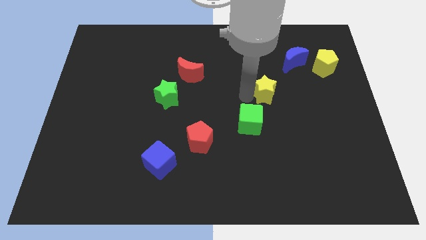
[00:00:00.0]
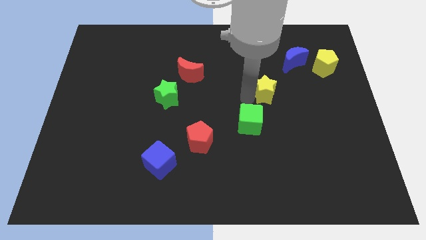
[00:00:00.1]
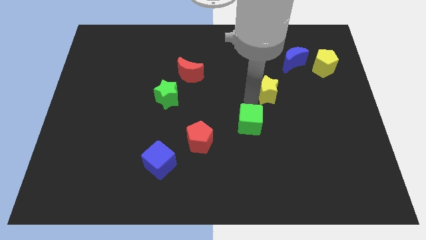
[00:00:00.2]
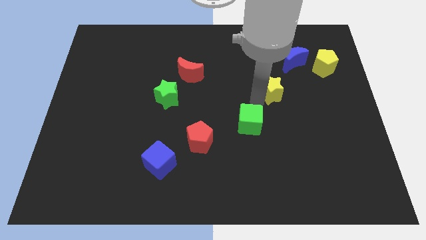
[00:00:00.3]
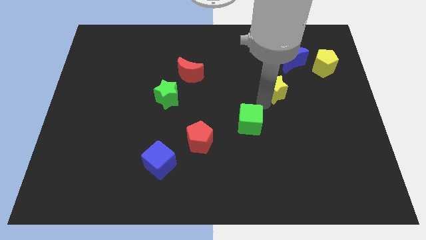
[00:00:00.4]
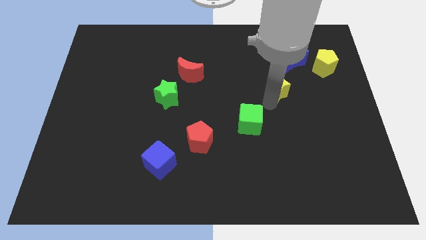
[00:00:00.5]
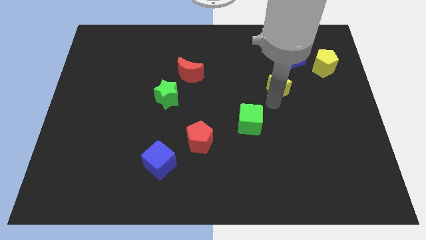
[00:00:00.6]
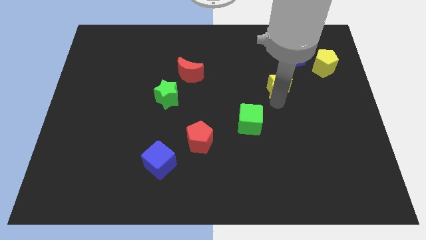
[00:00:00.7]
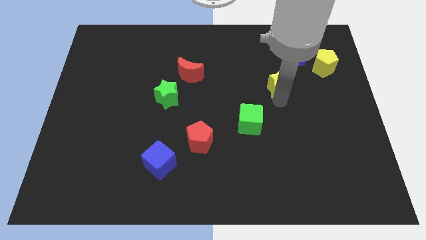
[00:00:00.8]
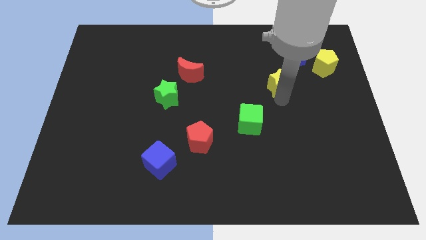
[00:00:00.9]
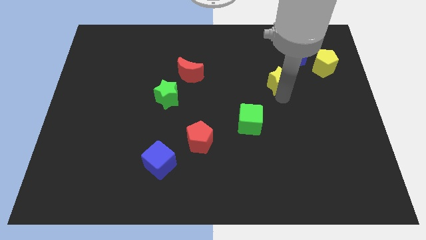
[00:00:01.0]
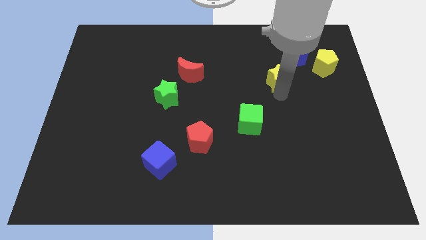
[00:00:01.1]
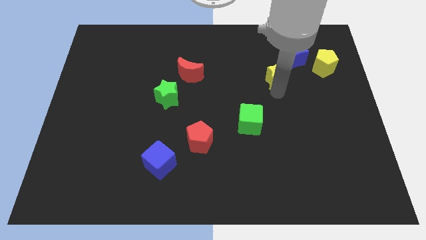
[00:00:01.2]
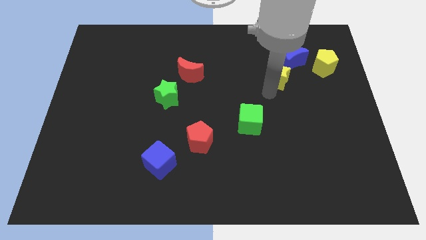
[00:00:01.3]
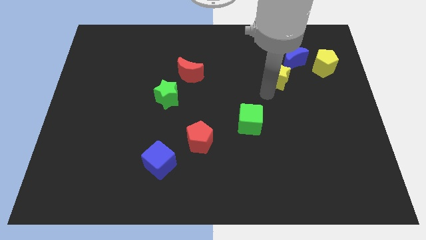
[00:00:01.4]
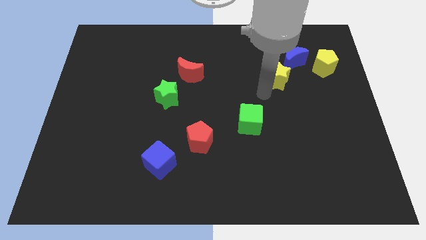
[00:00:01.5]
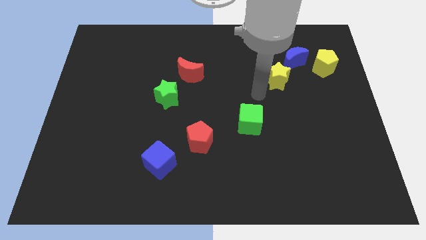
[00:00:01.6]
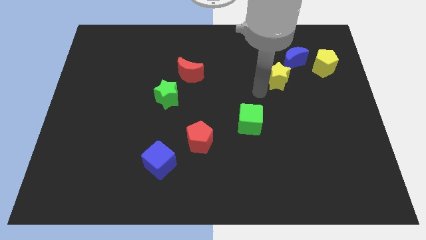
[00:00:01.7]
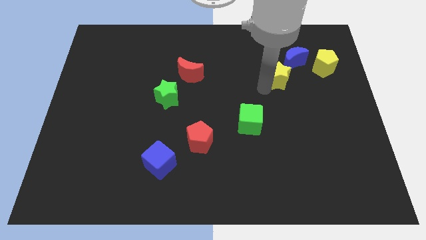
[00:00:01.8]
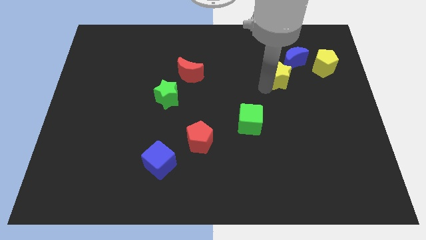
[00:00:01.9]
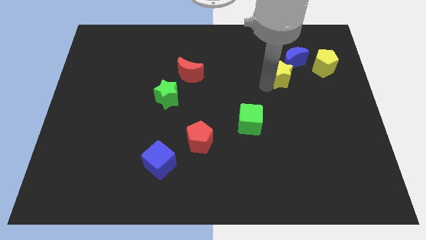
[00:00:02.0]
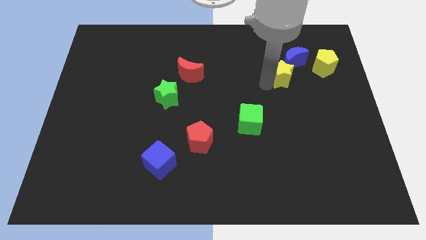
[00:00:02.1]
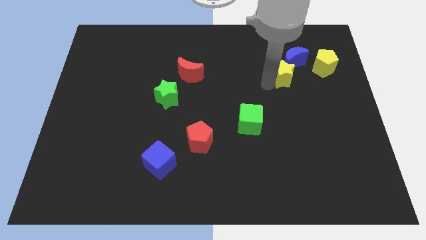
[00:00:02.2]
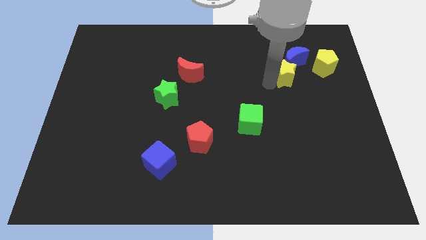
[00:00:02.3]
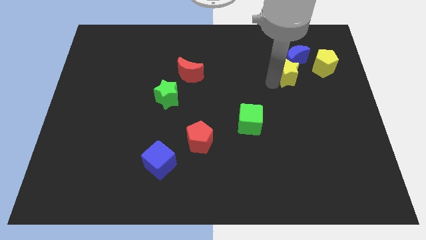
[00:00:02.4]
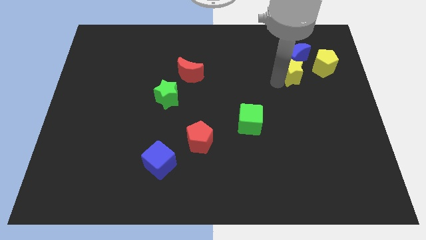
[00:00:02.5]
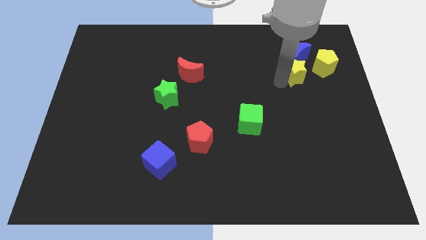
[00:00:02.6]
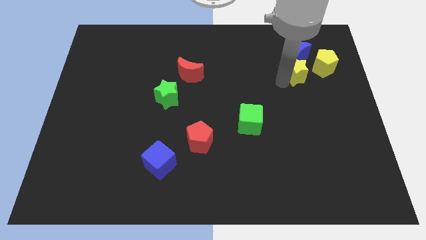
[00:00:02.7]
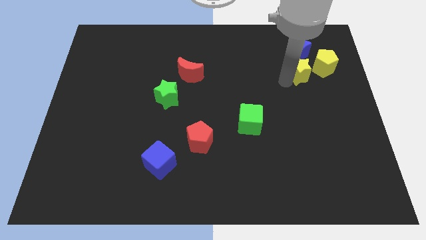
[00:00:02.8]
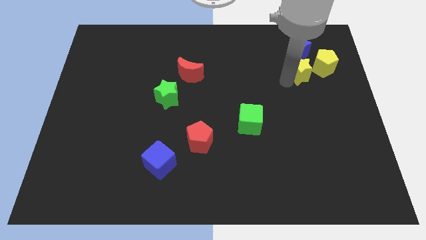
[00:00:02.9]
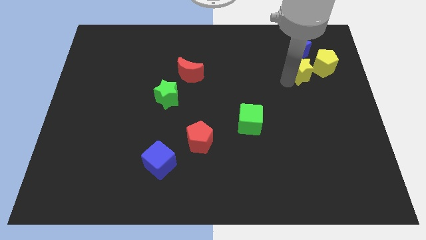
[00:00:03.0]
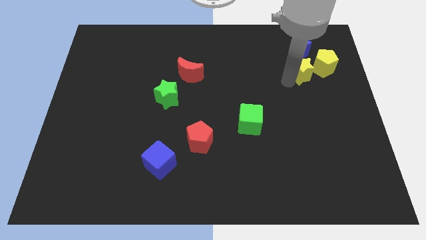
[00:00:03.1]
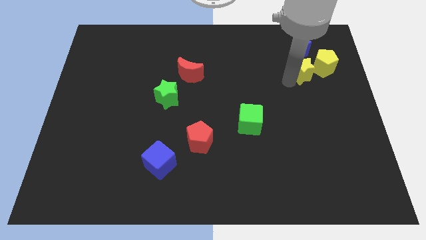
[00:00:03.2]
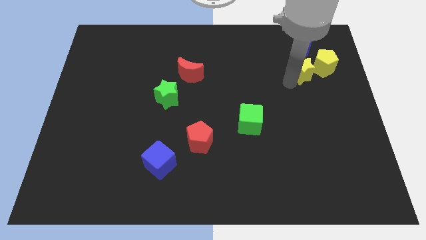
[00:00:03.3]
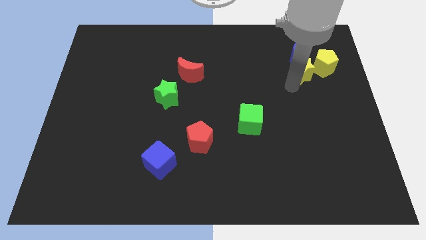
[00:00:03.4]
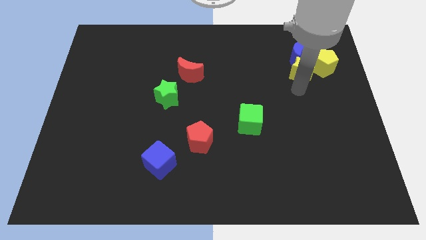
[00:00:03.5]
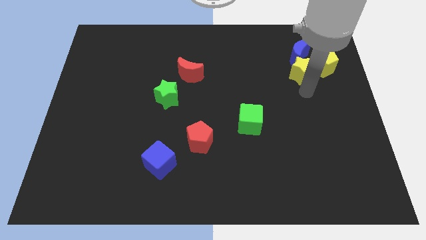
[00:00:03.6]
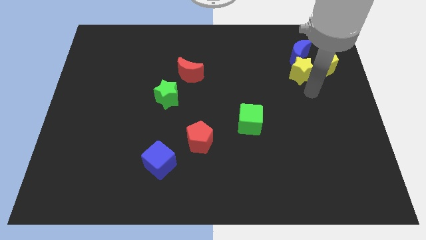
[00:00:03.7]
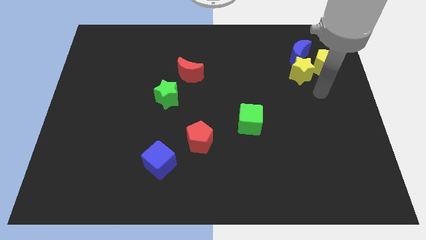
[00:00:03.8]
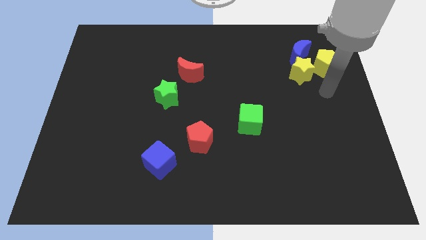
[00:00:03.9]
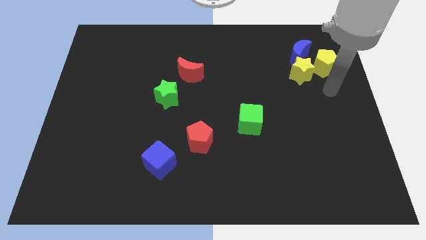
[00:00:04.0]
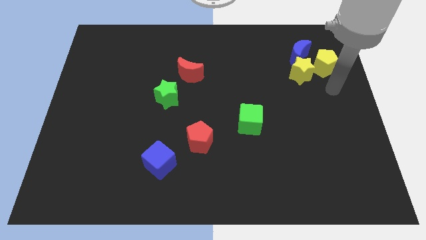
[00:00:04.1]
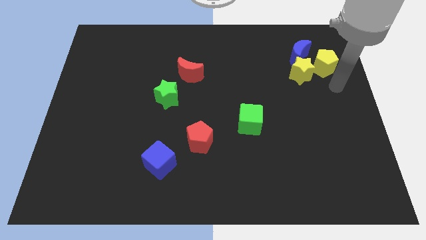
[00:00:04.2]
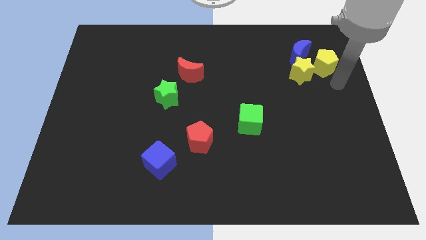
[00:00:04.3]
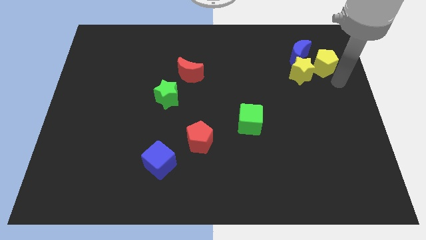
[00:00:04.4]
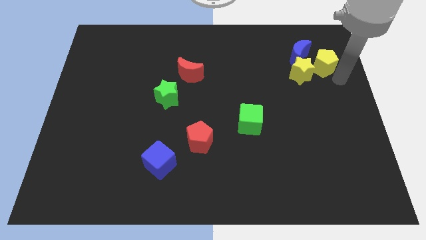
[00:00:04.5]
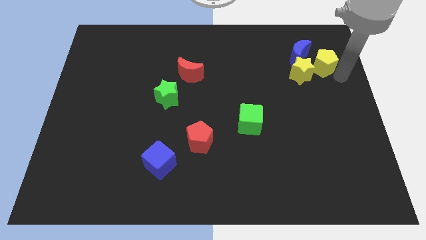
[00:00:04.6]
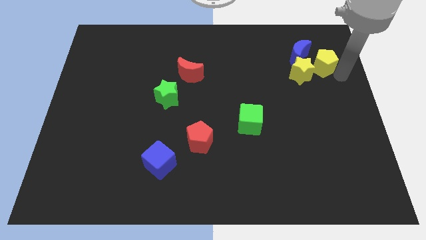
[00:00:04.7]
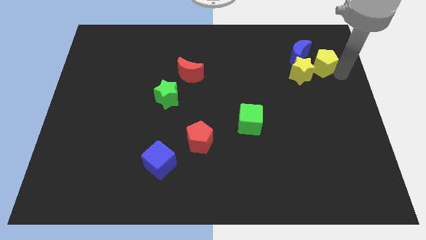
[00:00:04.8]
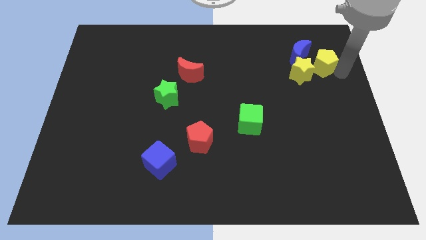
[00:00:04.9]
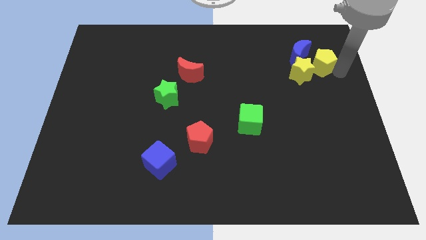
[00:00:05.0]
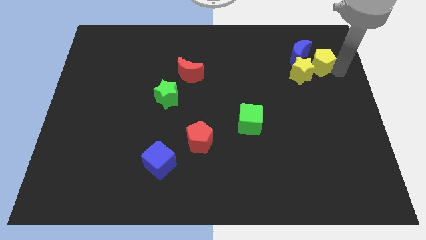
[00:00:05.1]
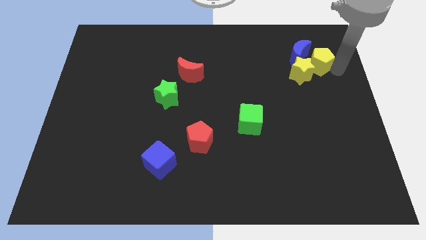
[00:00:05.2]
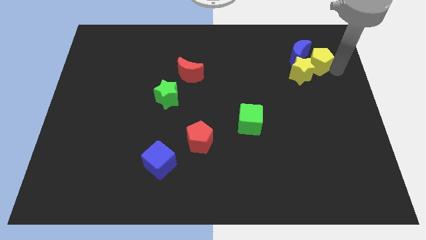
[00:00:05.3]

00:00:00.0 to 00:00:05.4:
move the yellow star in between the yellow pentagon and the blue crescent

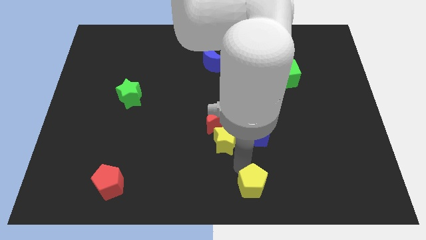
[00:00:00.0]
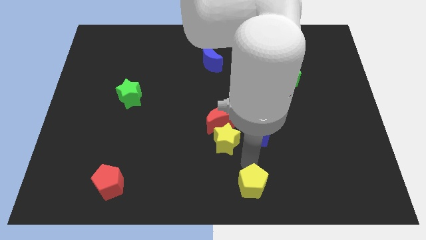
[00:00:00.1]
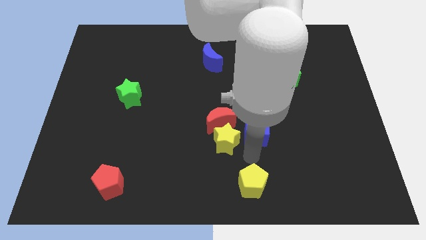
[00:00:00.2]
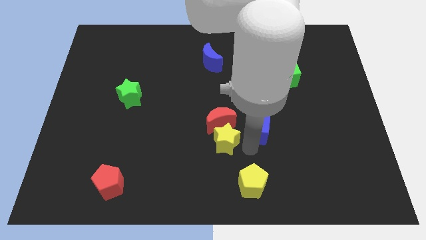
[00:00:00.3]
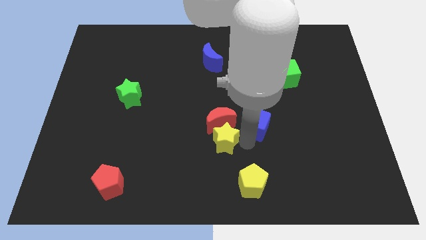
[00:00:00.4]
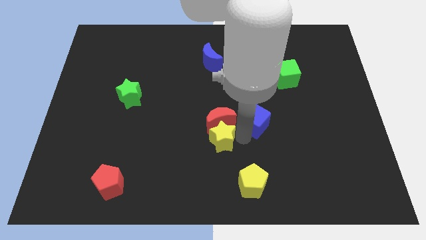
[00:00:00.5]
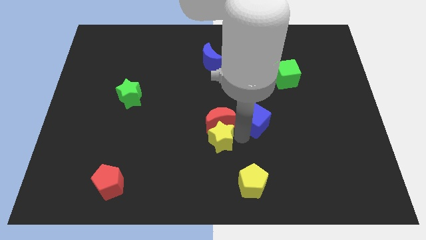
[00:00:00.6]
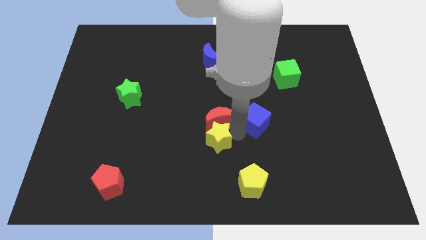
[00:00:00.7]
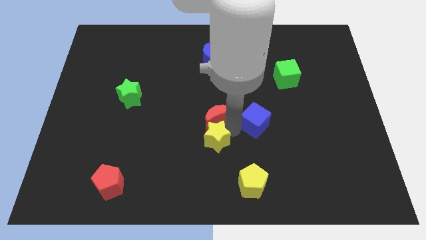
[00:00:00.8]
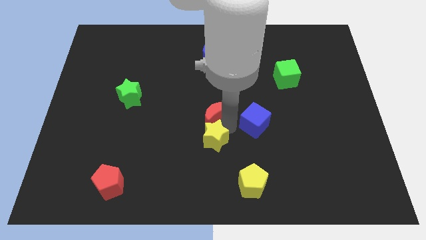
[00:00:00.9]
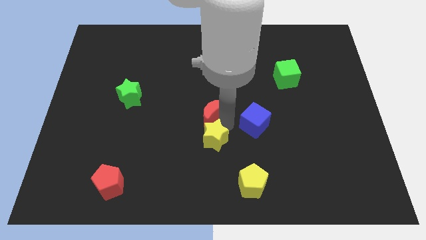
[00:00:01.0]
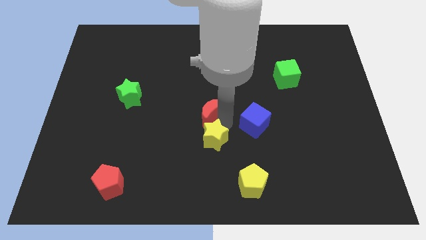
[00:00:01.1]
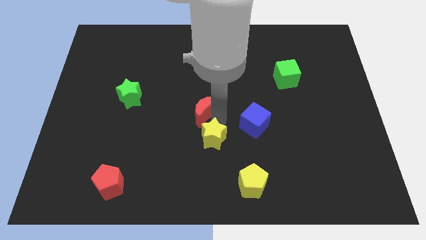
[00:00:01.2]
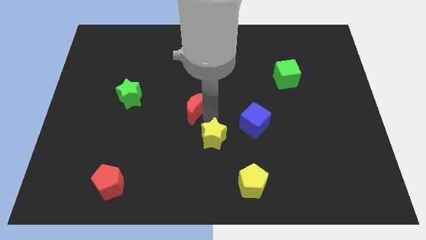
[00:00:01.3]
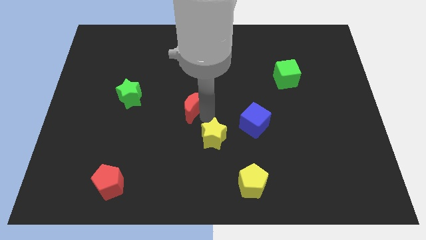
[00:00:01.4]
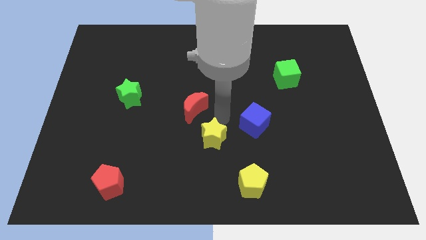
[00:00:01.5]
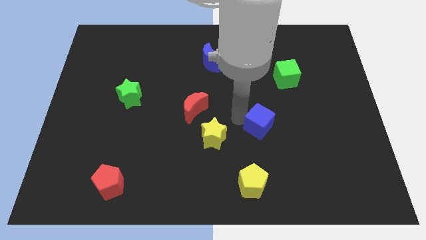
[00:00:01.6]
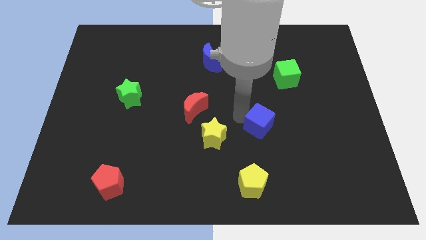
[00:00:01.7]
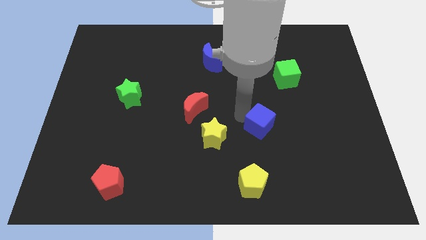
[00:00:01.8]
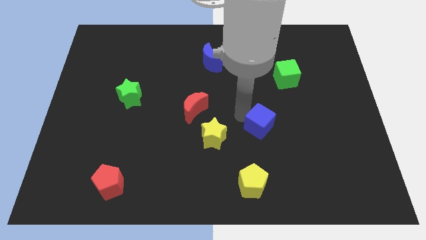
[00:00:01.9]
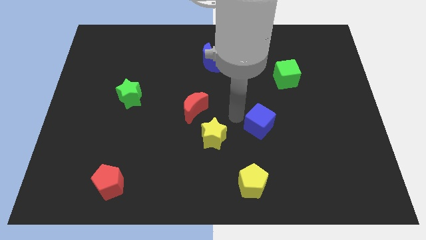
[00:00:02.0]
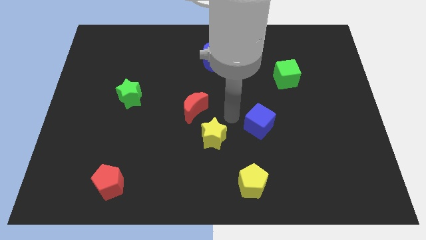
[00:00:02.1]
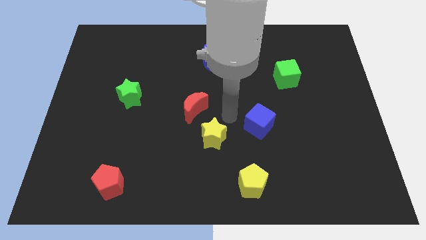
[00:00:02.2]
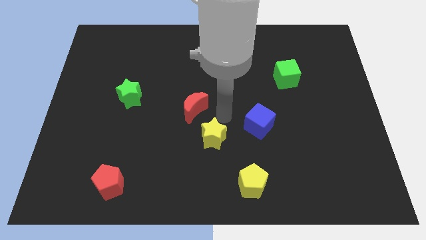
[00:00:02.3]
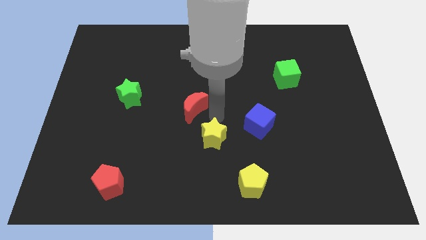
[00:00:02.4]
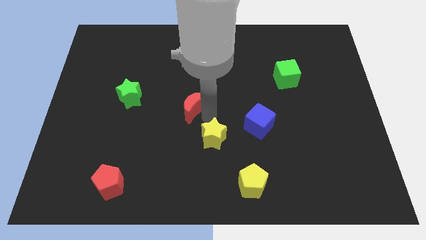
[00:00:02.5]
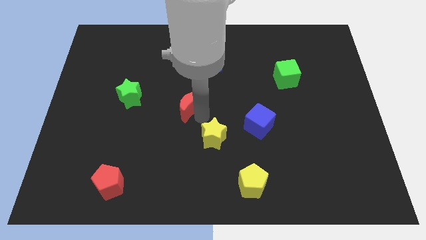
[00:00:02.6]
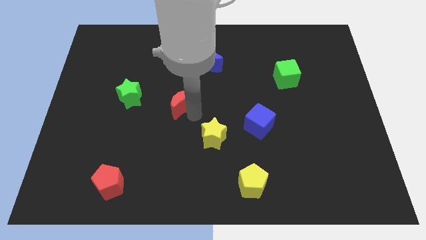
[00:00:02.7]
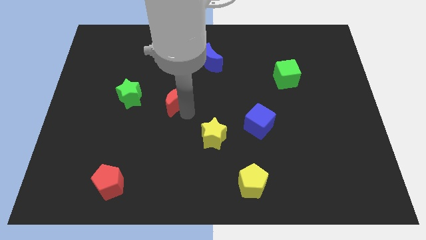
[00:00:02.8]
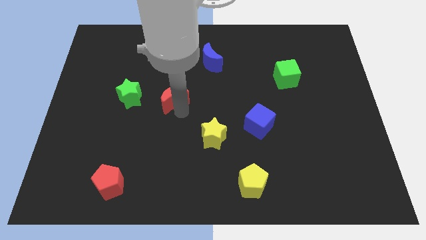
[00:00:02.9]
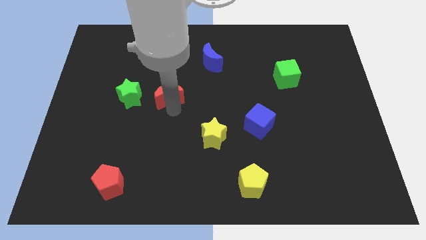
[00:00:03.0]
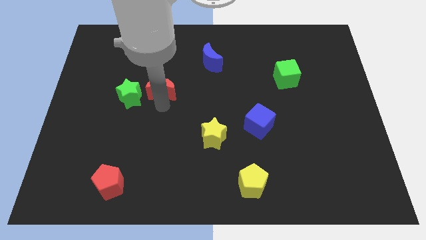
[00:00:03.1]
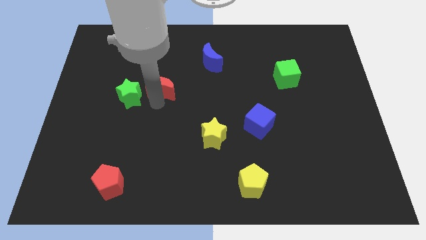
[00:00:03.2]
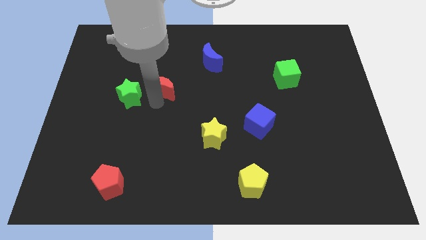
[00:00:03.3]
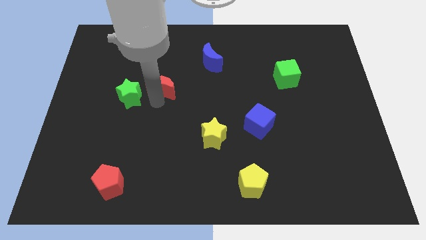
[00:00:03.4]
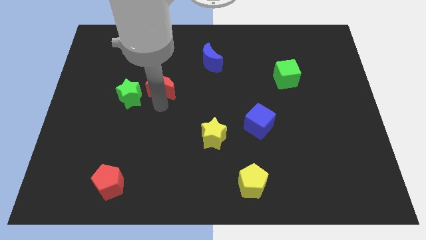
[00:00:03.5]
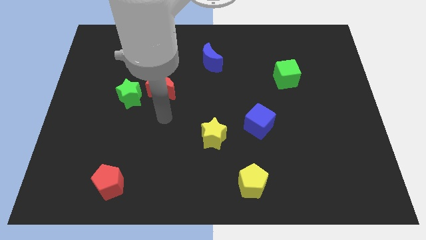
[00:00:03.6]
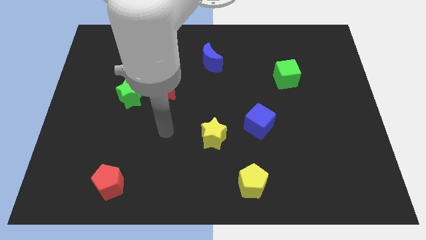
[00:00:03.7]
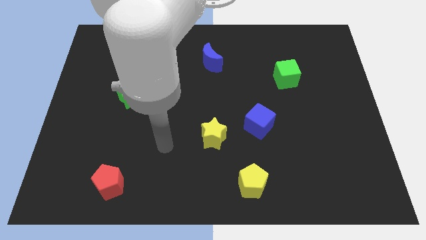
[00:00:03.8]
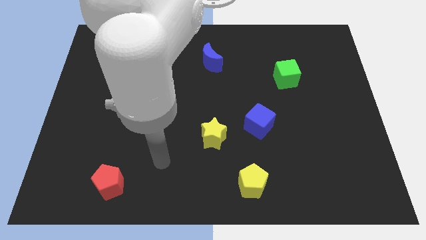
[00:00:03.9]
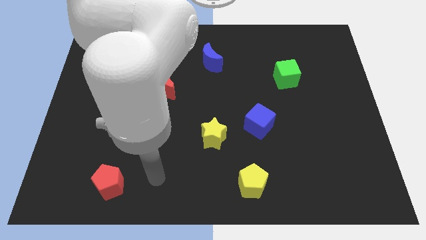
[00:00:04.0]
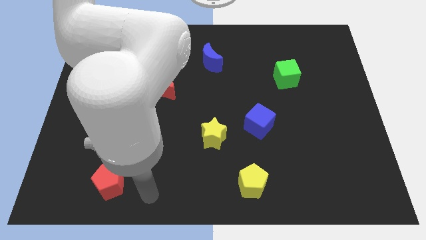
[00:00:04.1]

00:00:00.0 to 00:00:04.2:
place the red crescent right to the green star
